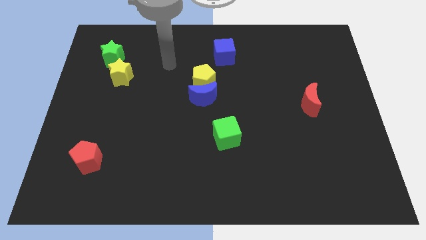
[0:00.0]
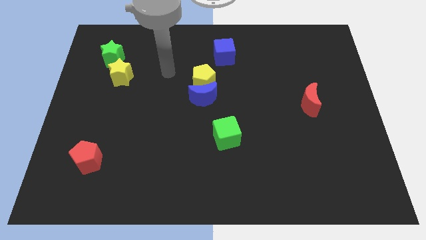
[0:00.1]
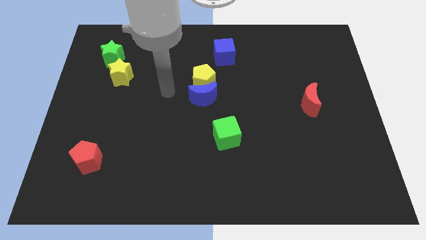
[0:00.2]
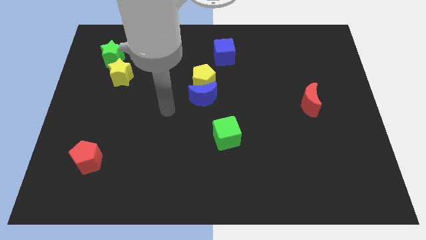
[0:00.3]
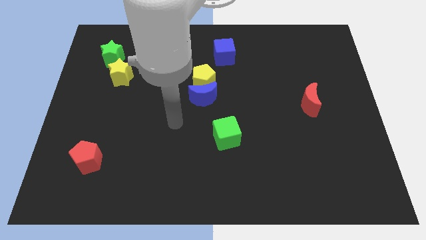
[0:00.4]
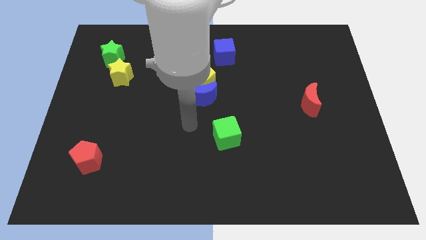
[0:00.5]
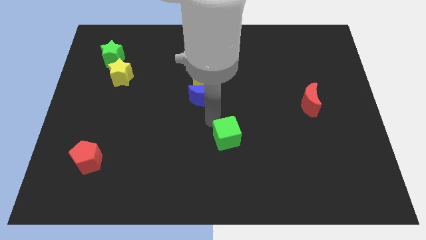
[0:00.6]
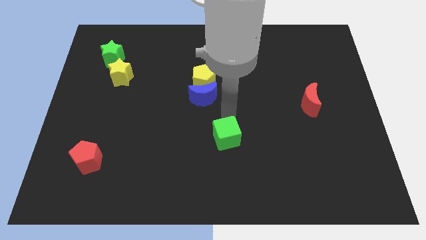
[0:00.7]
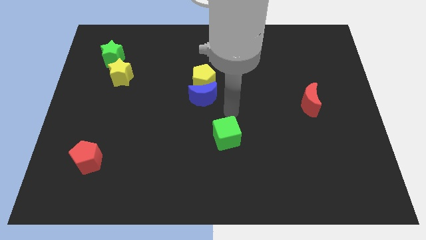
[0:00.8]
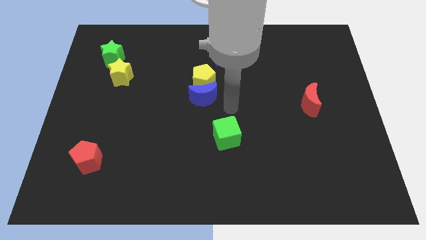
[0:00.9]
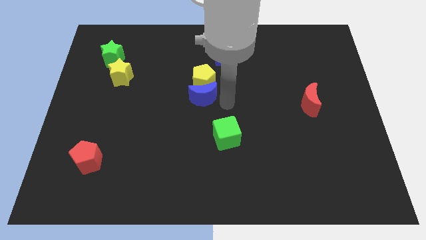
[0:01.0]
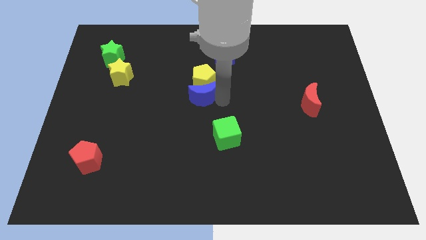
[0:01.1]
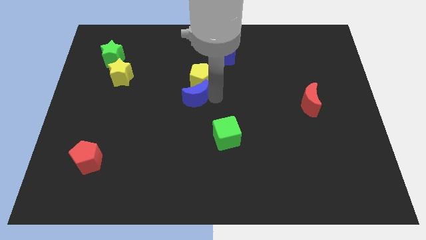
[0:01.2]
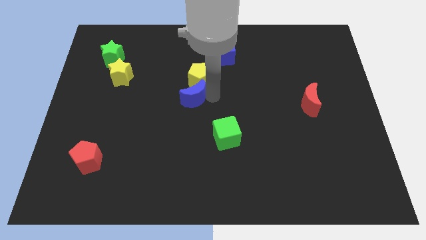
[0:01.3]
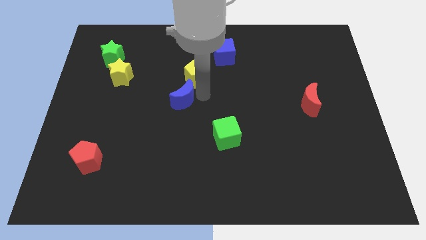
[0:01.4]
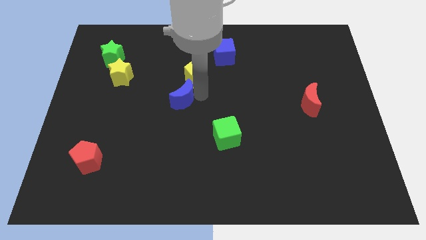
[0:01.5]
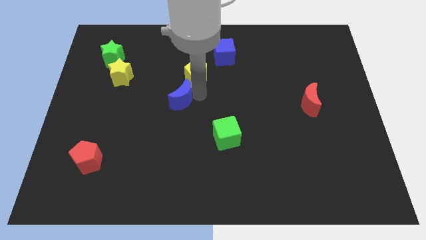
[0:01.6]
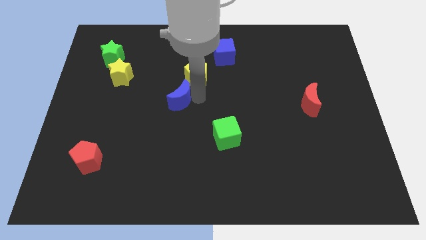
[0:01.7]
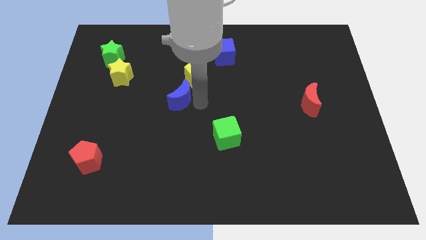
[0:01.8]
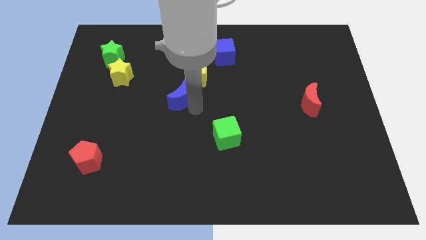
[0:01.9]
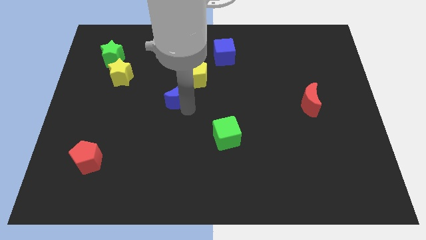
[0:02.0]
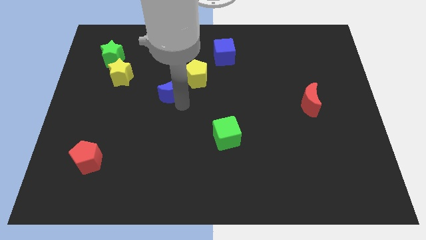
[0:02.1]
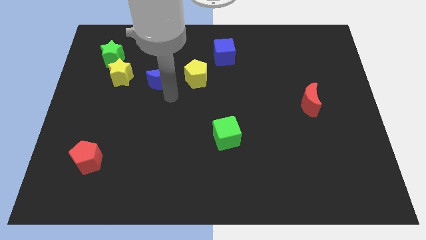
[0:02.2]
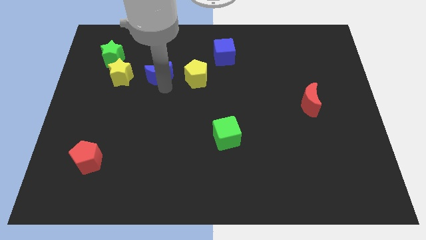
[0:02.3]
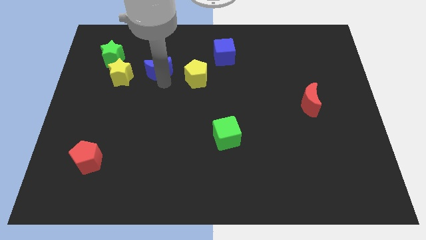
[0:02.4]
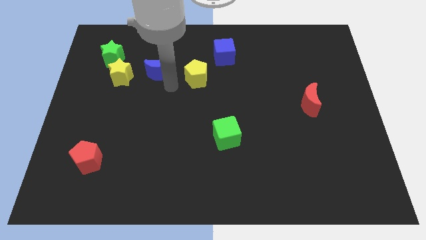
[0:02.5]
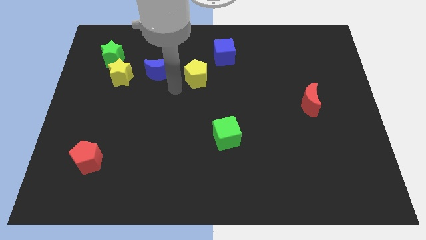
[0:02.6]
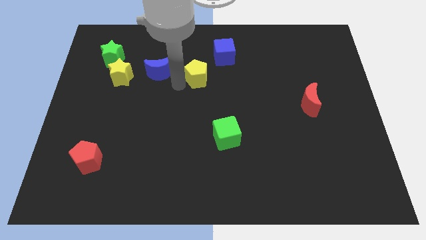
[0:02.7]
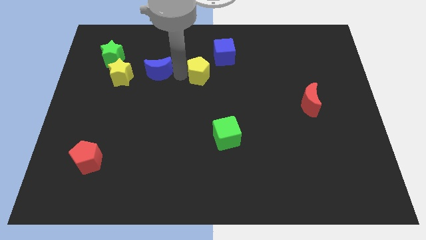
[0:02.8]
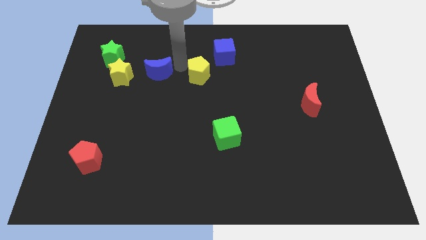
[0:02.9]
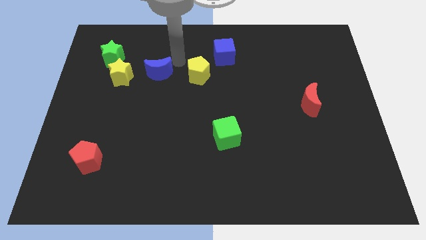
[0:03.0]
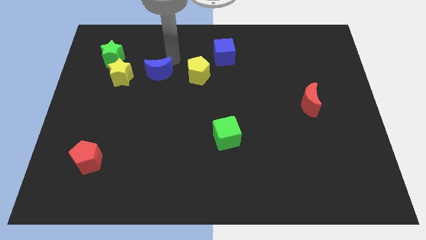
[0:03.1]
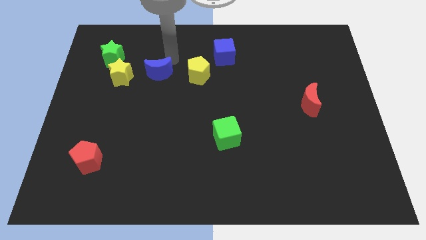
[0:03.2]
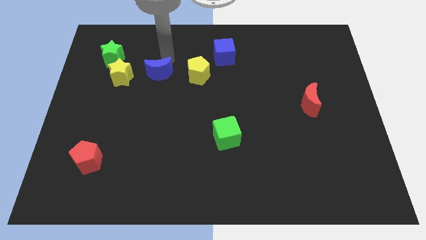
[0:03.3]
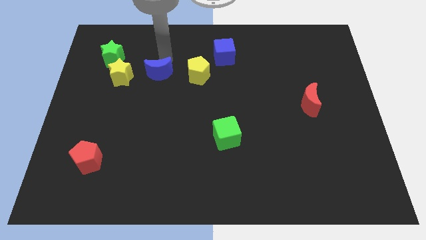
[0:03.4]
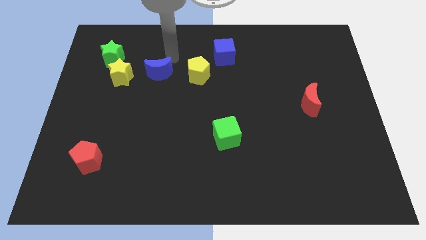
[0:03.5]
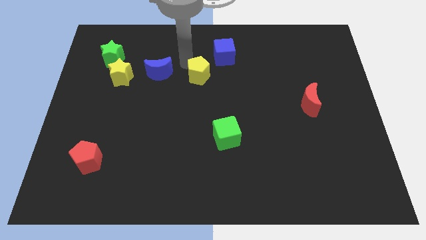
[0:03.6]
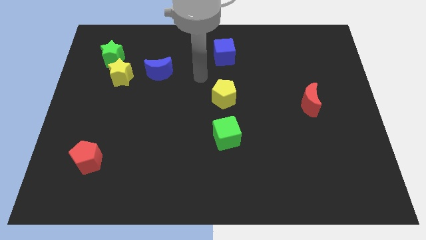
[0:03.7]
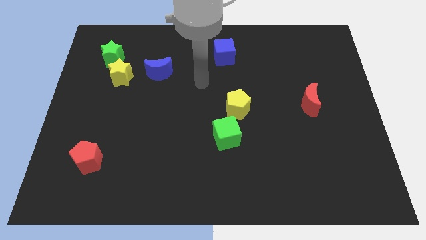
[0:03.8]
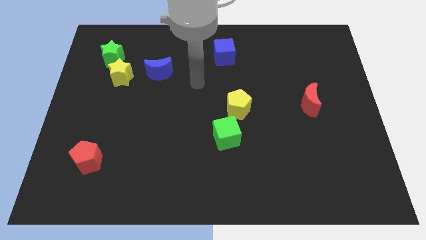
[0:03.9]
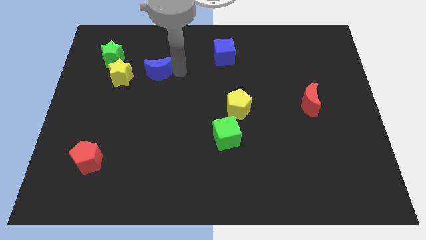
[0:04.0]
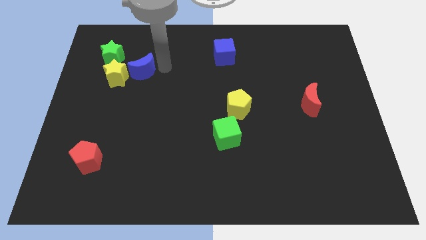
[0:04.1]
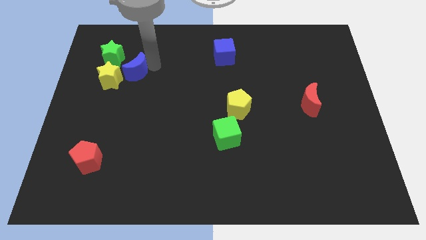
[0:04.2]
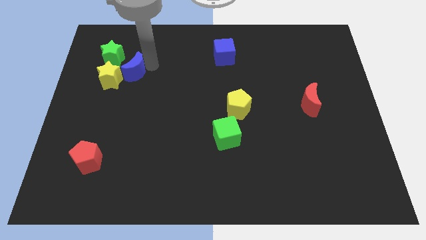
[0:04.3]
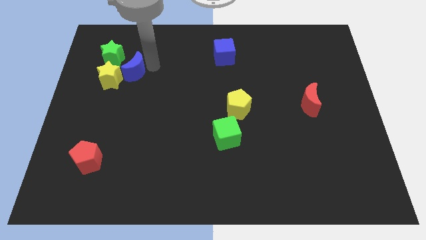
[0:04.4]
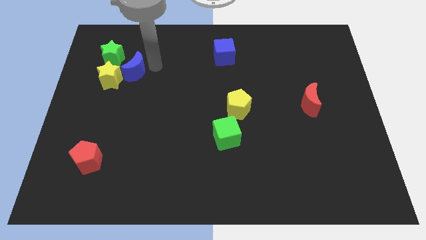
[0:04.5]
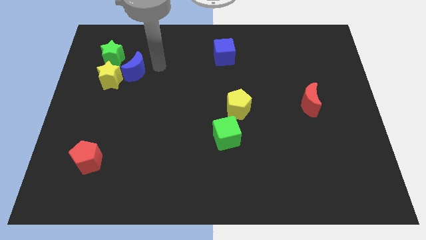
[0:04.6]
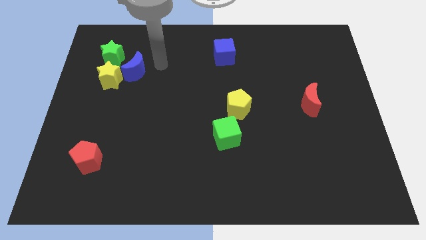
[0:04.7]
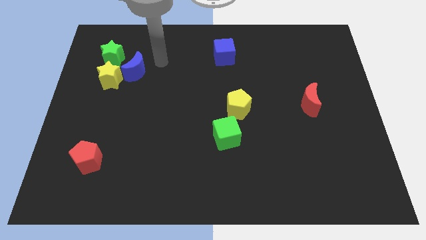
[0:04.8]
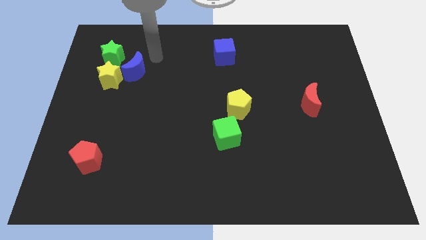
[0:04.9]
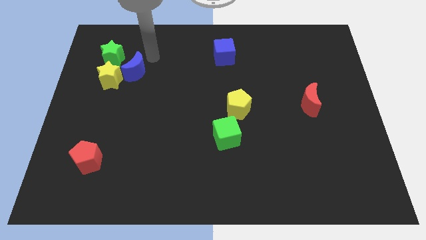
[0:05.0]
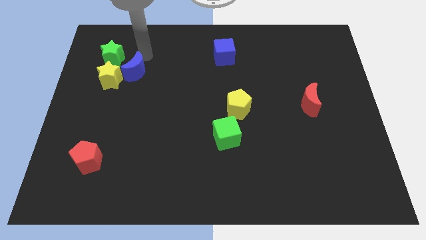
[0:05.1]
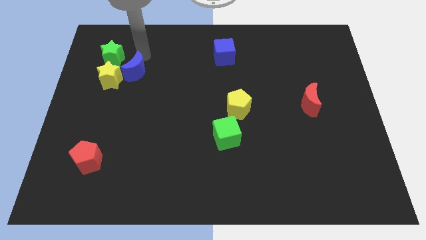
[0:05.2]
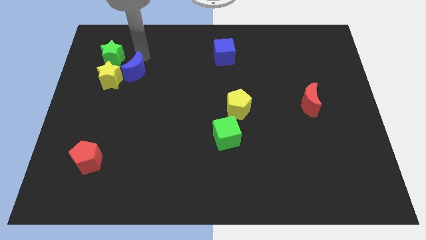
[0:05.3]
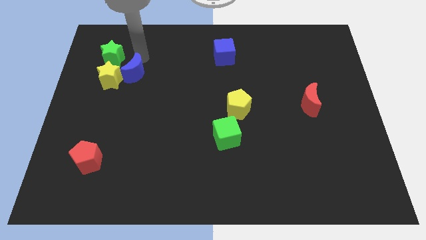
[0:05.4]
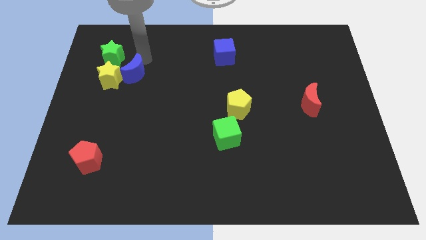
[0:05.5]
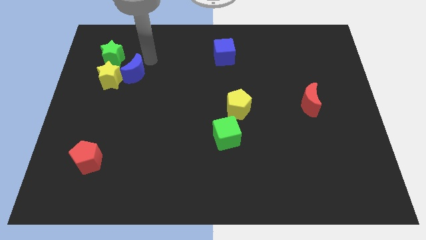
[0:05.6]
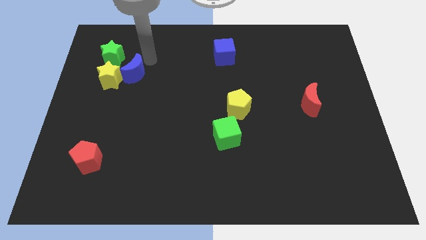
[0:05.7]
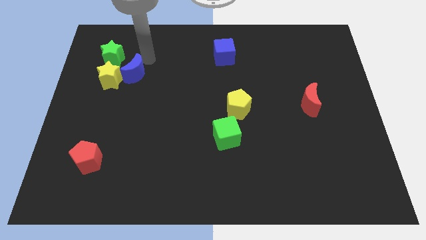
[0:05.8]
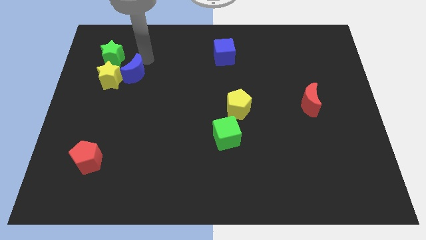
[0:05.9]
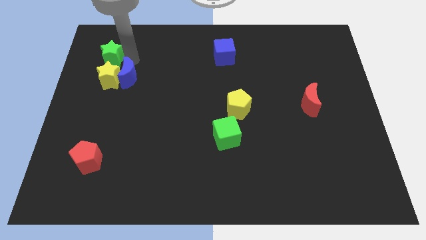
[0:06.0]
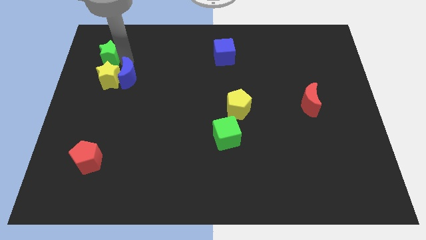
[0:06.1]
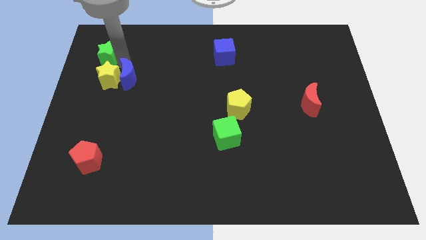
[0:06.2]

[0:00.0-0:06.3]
slide the blue moon towards the yellow star

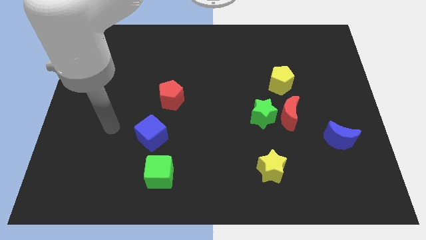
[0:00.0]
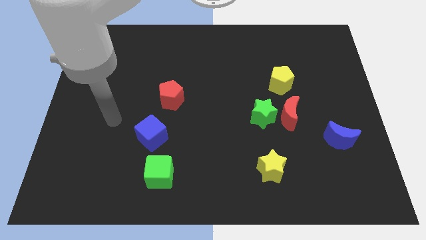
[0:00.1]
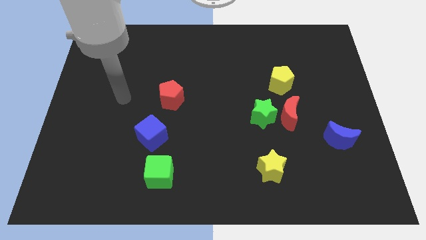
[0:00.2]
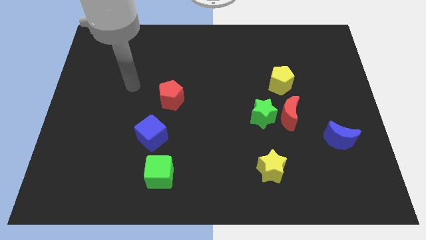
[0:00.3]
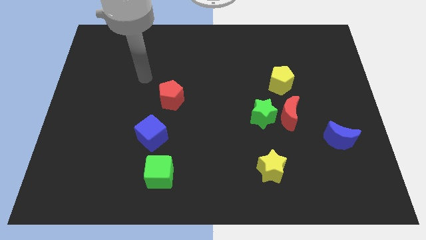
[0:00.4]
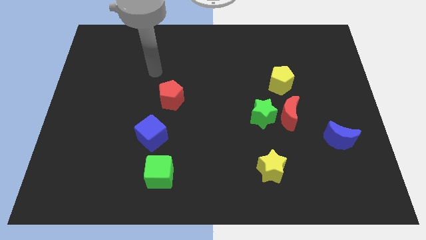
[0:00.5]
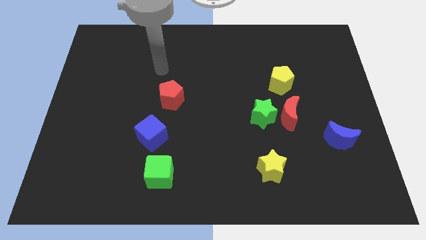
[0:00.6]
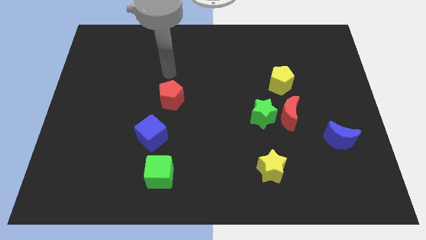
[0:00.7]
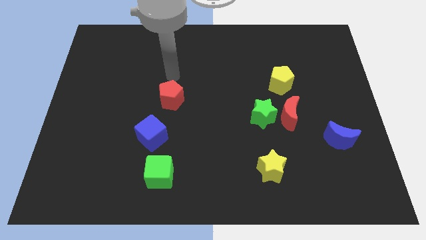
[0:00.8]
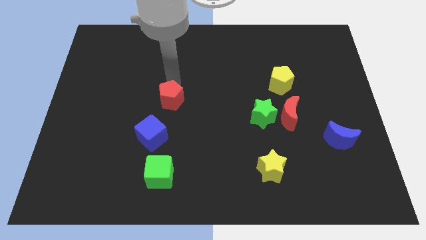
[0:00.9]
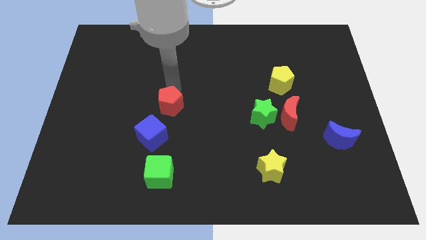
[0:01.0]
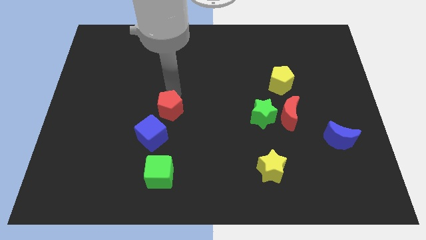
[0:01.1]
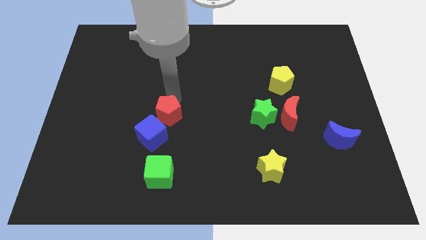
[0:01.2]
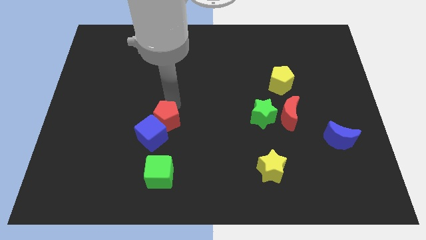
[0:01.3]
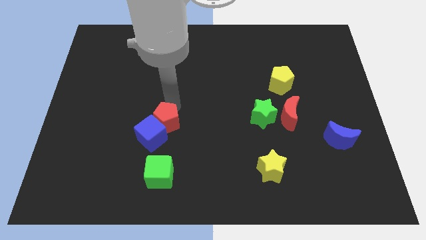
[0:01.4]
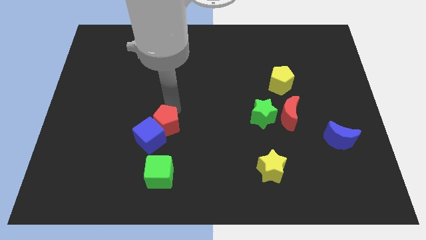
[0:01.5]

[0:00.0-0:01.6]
move the red pentagon close to the blue cube

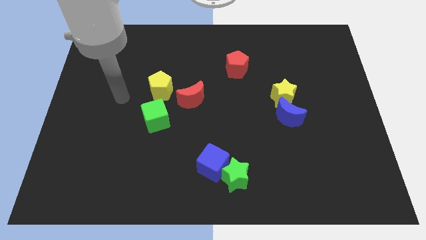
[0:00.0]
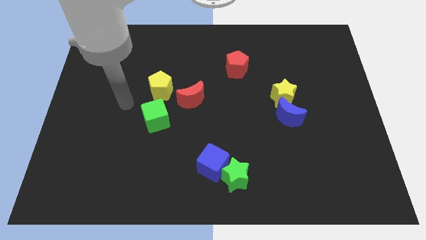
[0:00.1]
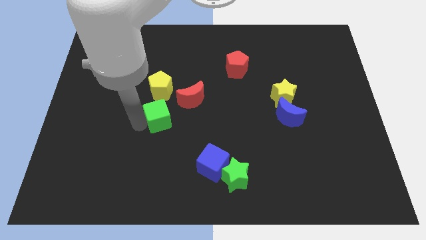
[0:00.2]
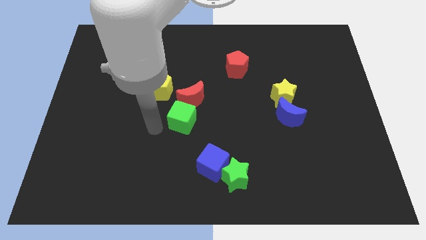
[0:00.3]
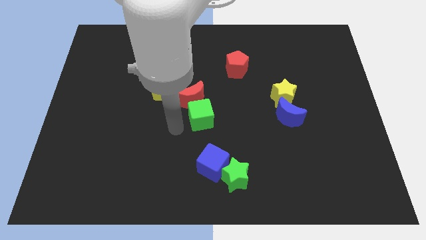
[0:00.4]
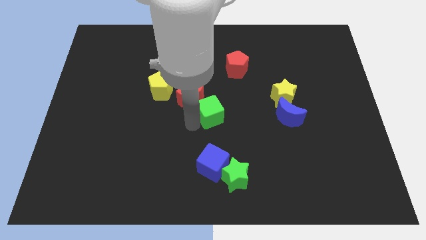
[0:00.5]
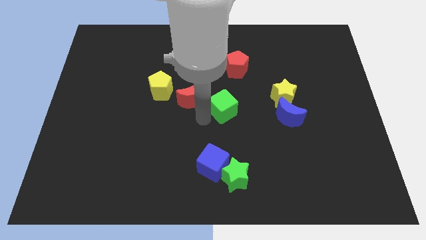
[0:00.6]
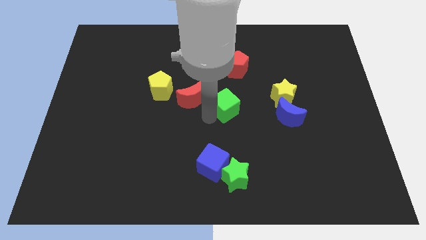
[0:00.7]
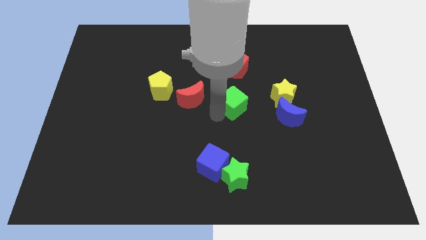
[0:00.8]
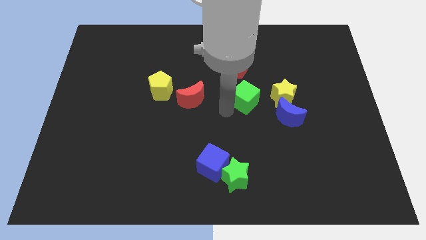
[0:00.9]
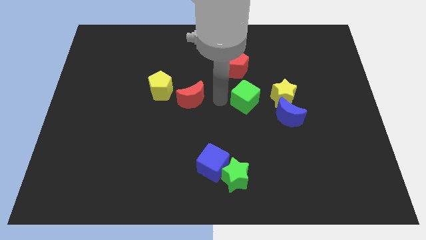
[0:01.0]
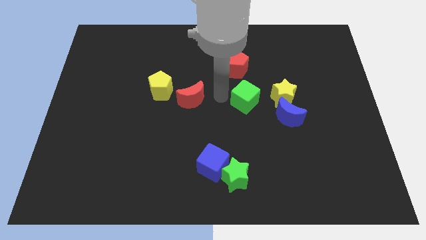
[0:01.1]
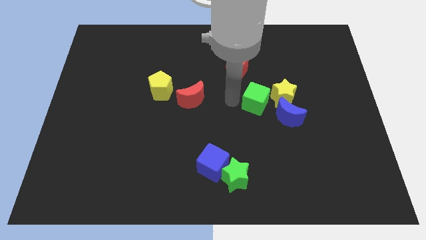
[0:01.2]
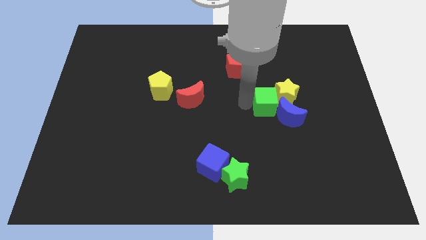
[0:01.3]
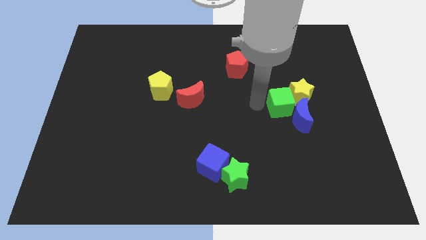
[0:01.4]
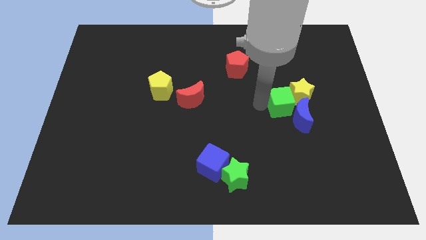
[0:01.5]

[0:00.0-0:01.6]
move the green cube close to the blue moon
